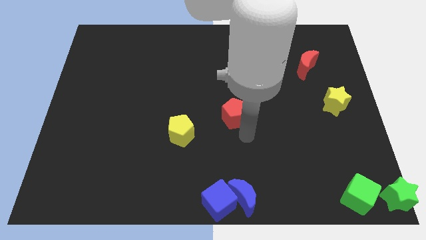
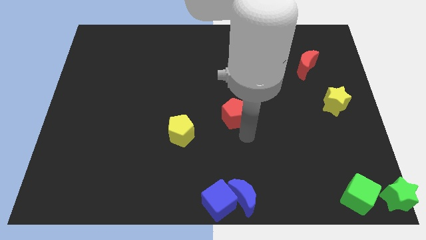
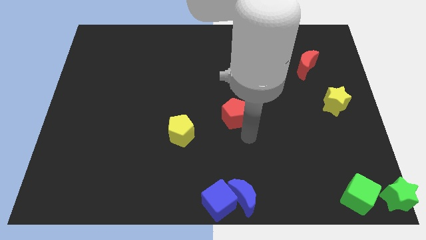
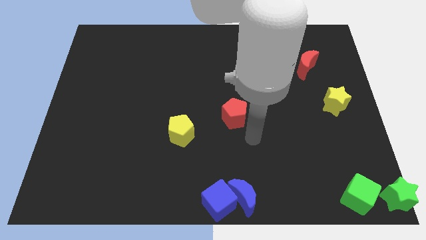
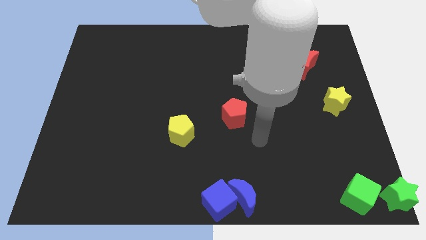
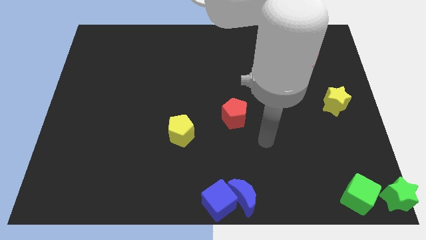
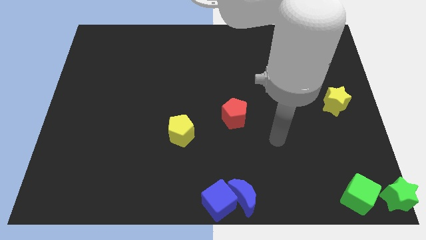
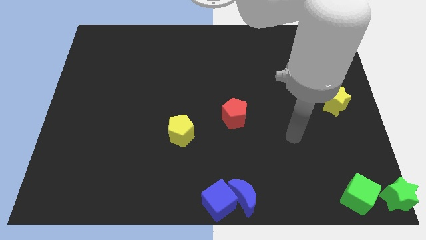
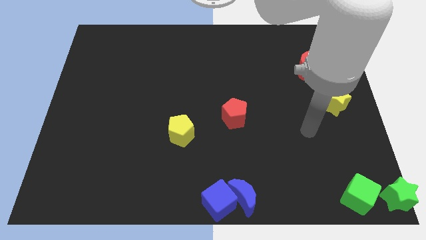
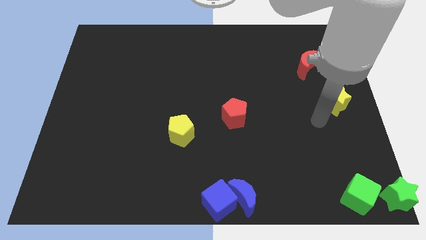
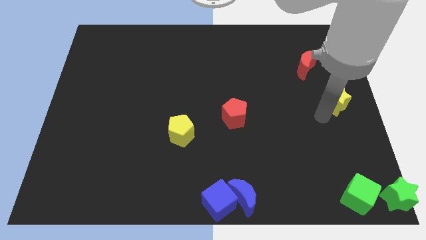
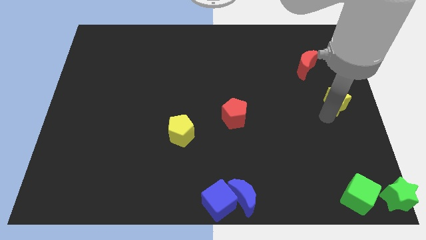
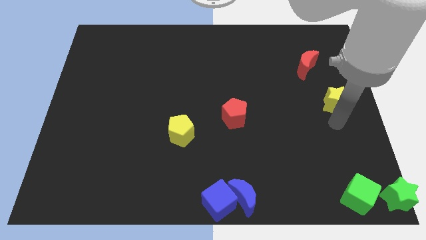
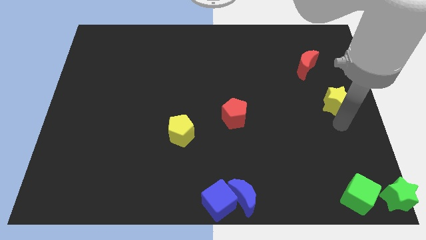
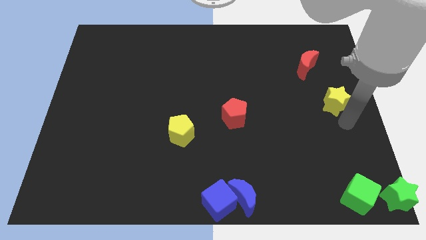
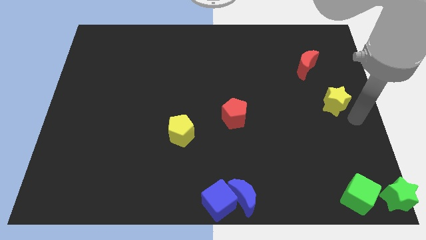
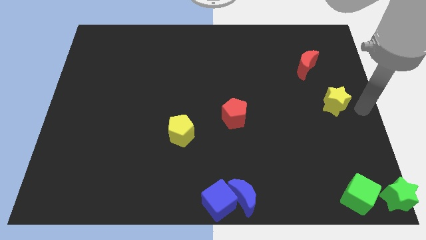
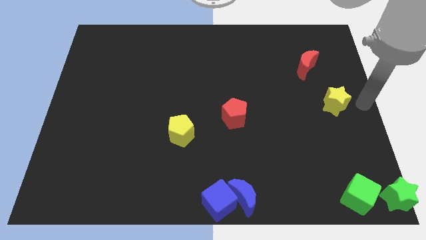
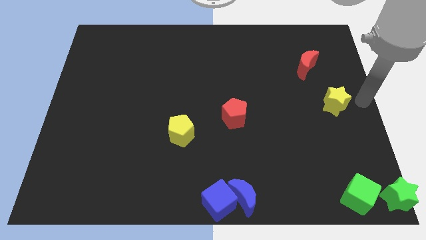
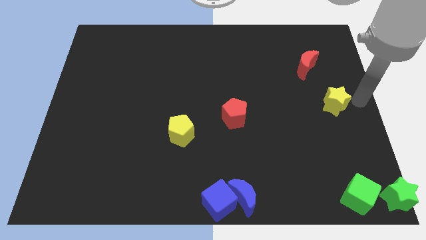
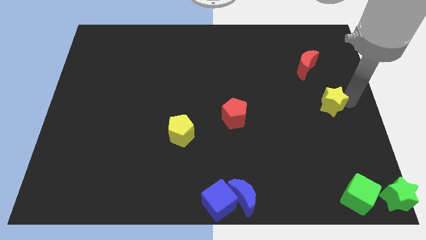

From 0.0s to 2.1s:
tap the yellow star

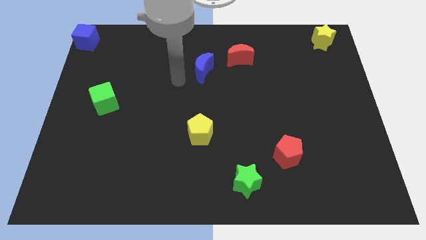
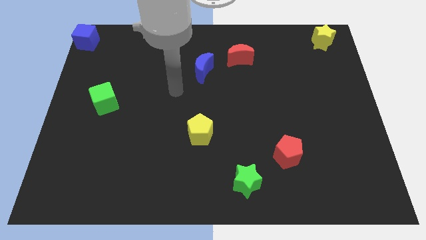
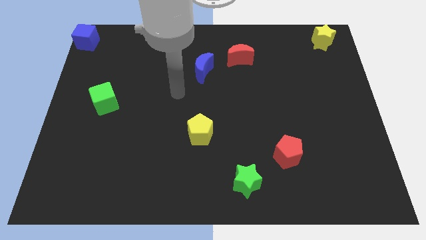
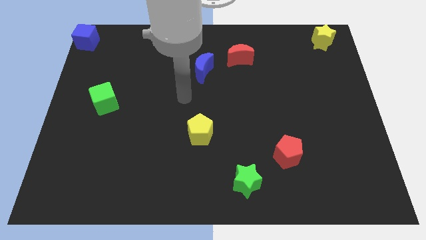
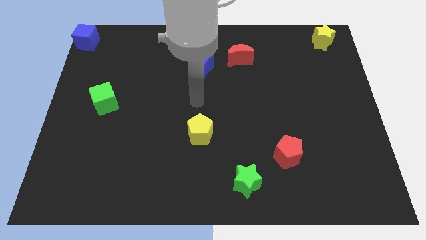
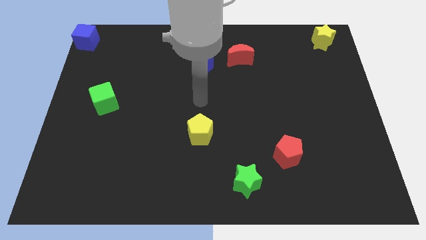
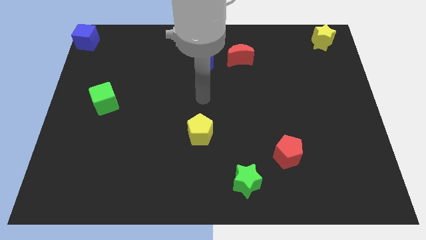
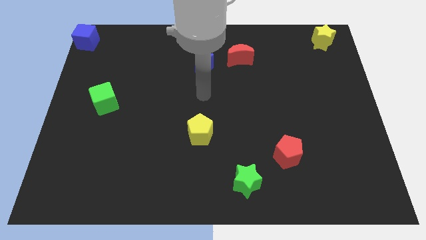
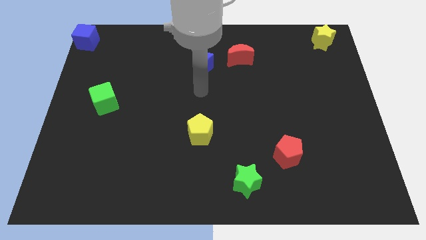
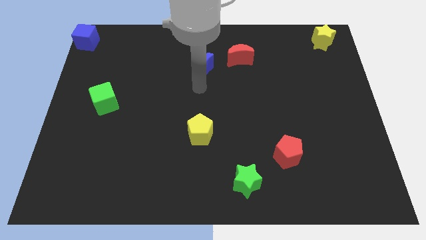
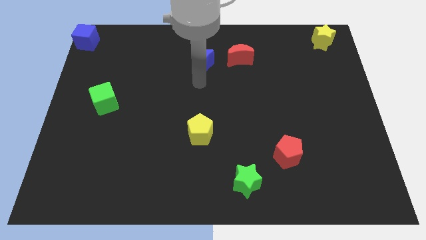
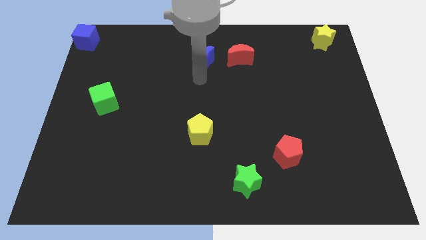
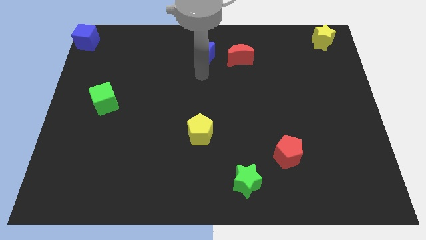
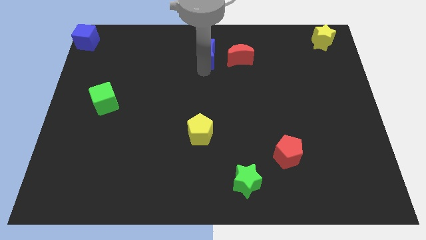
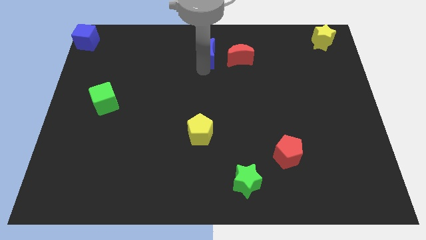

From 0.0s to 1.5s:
place the blue moon to the left of the red moon

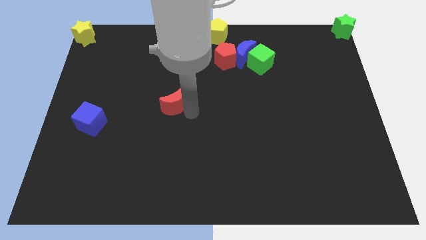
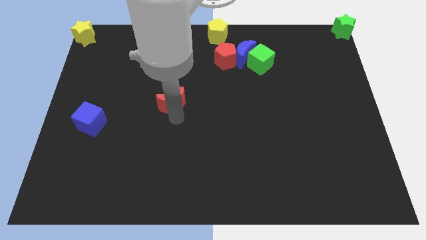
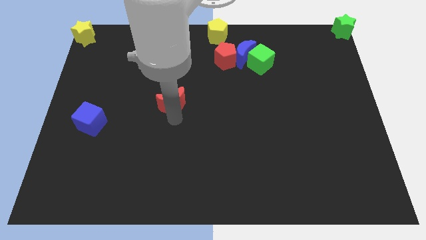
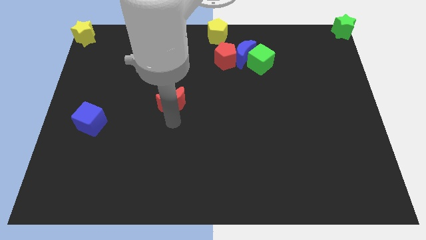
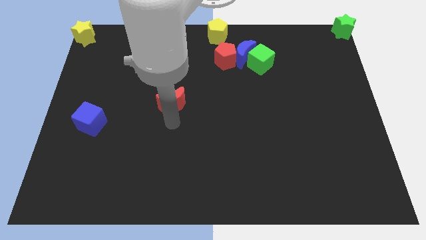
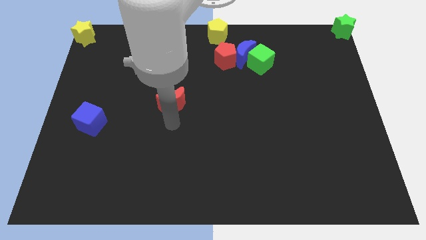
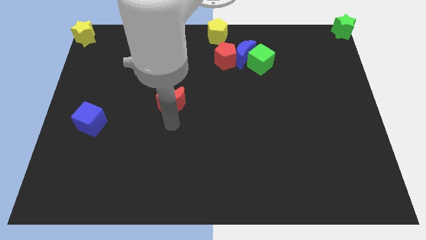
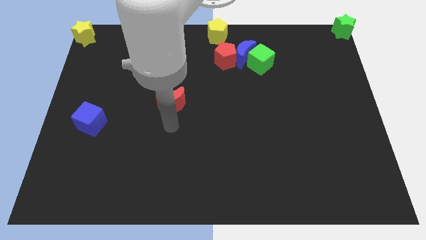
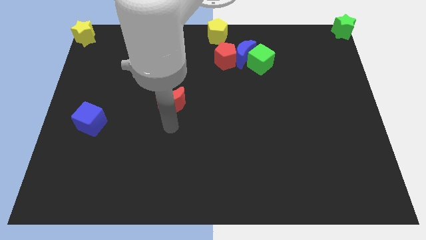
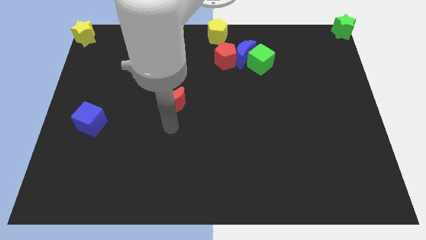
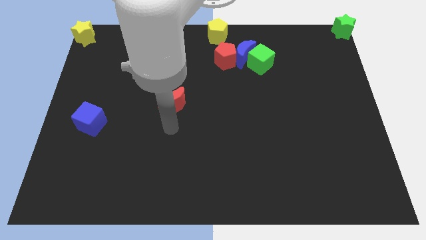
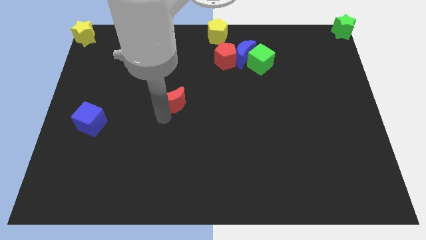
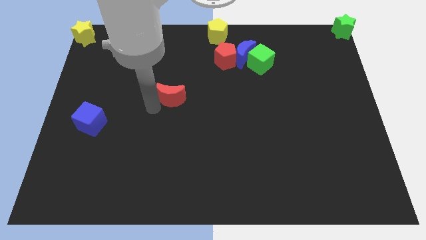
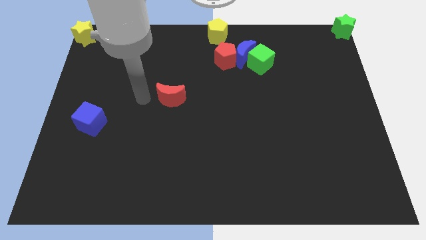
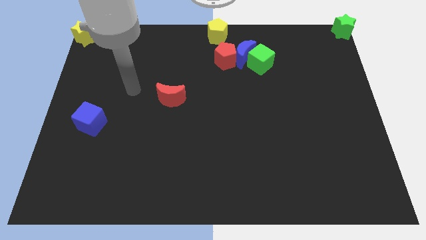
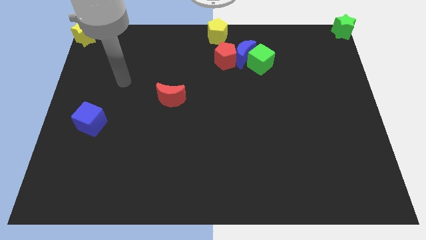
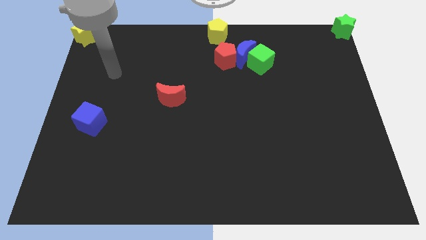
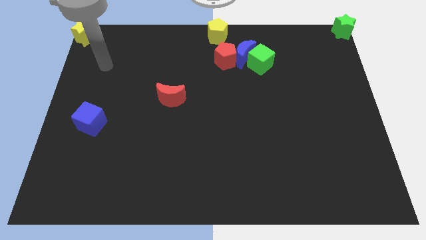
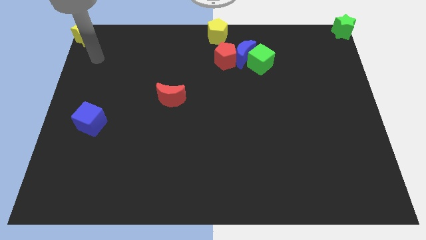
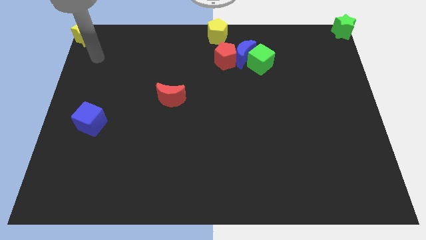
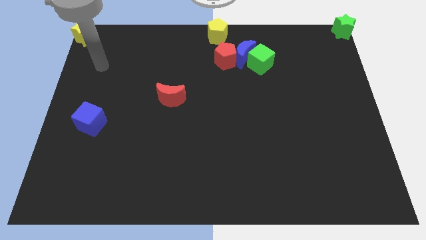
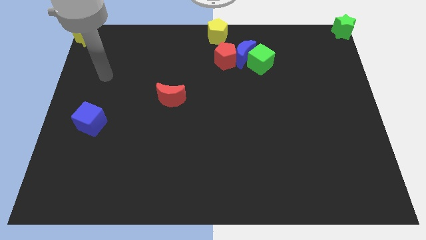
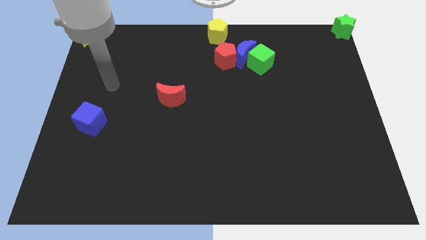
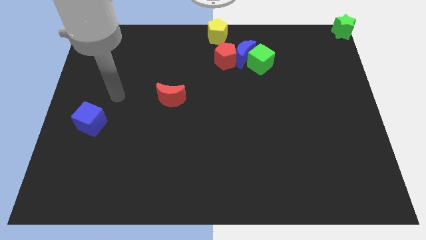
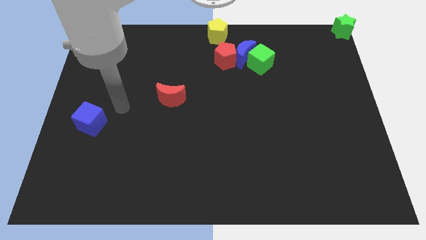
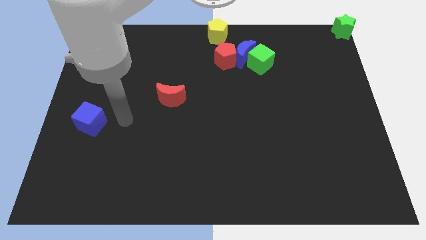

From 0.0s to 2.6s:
tap the bottom side of the red crescent

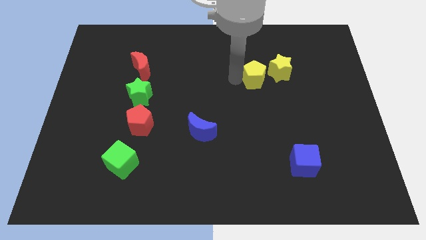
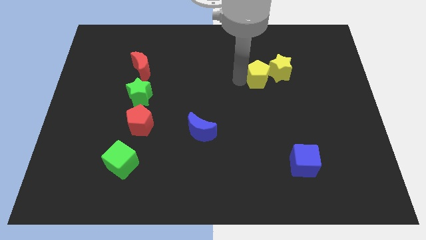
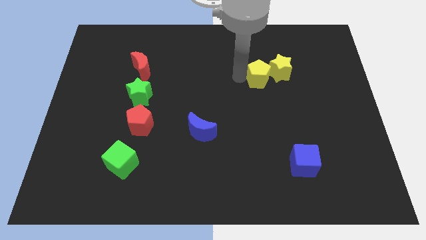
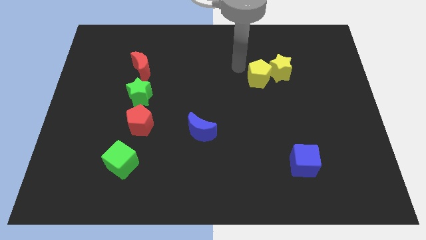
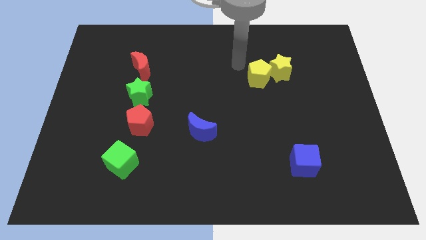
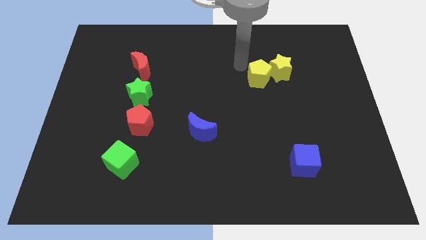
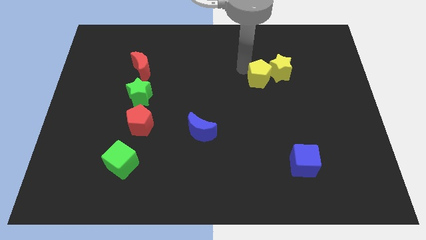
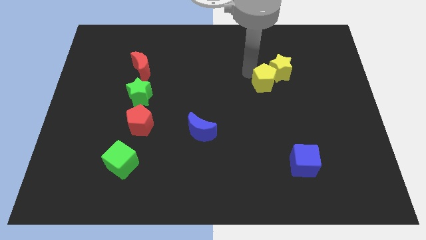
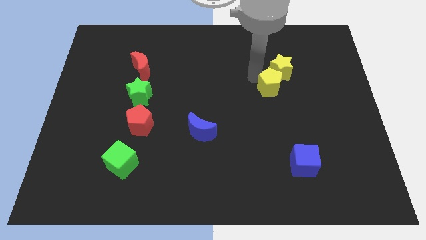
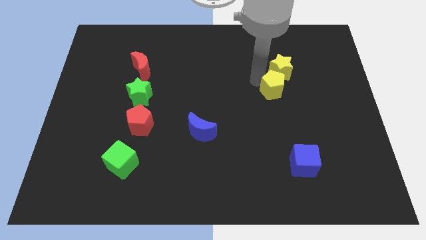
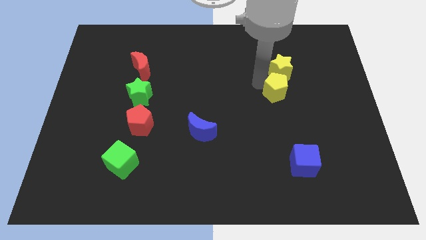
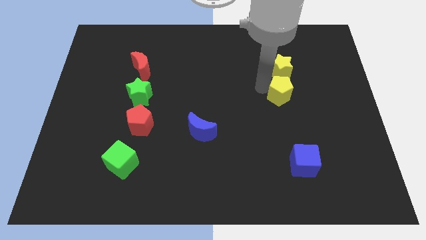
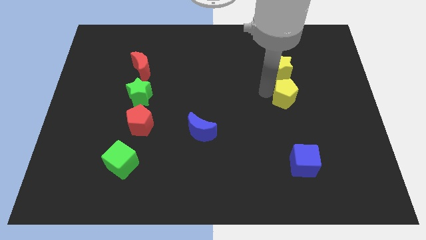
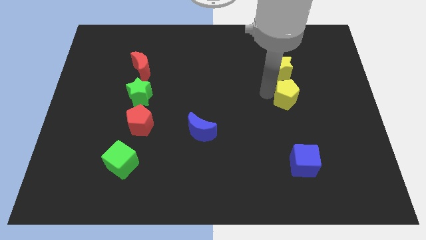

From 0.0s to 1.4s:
place yellow pentagon to the bottom of yellow star

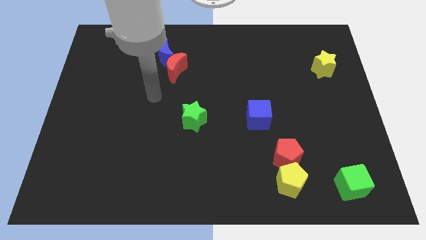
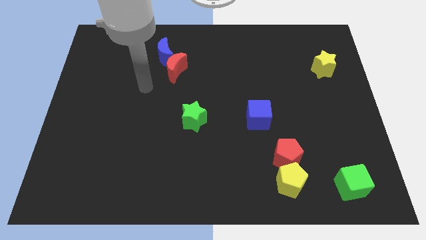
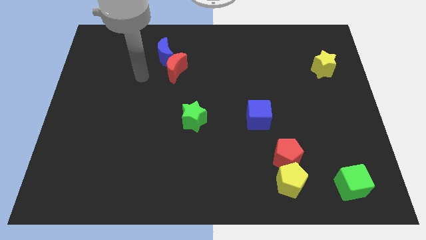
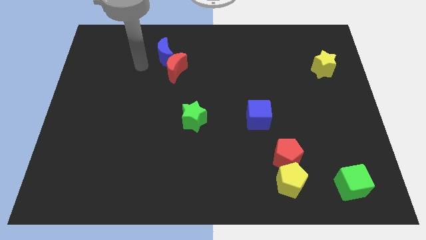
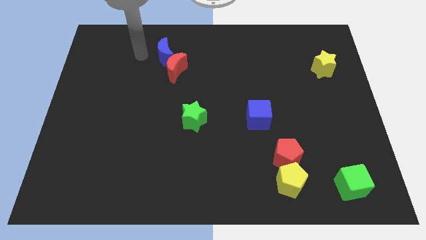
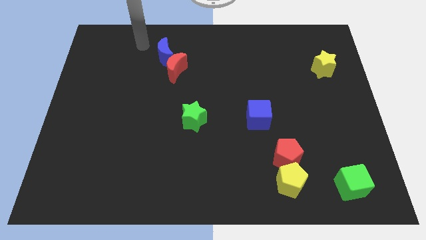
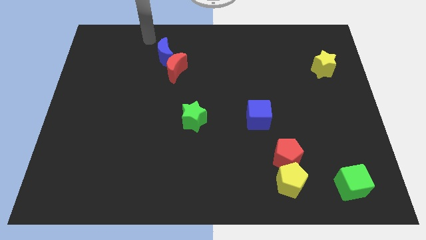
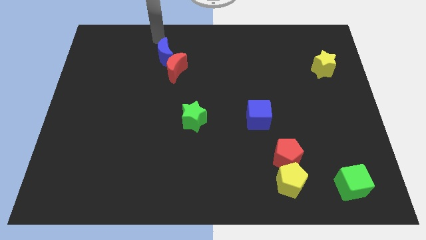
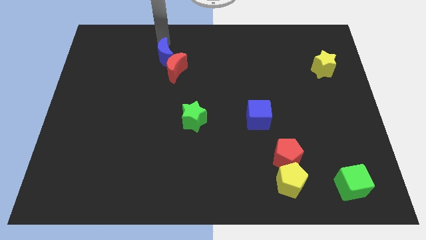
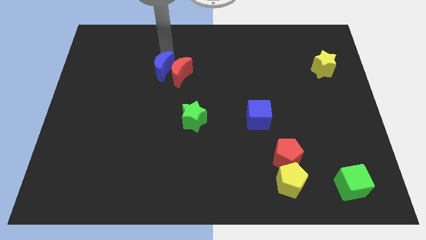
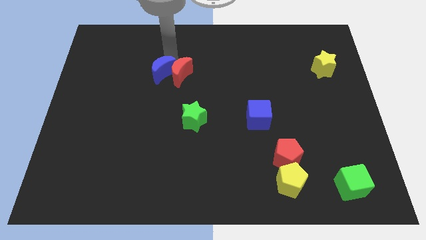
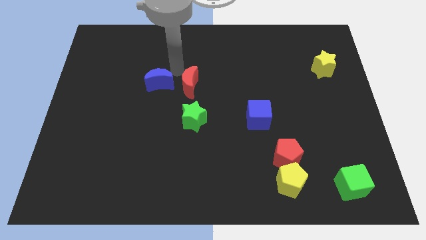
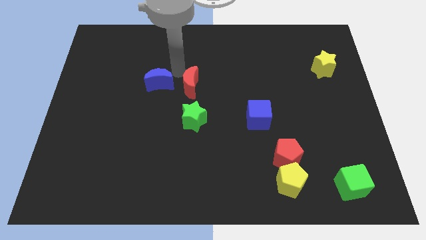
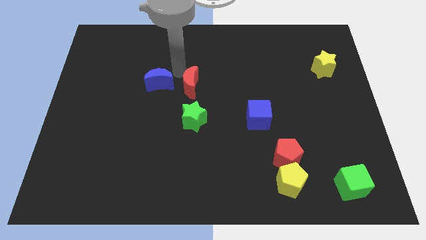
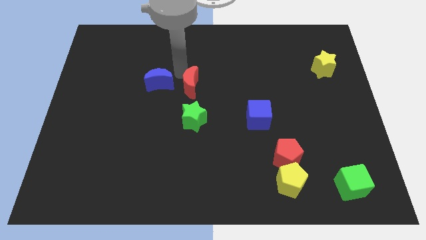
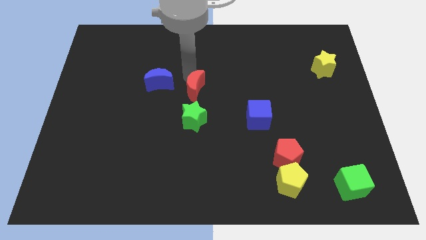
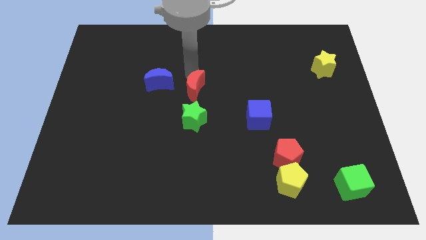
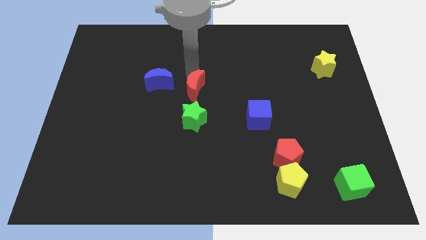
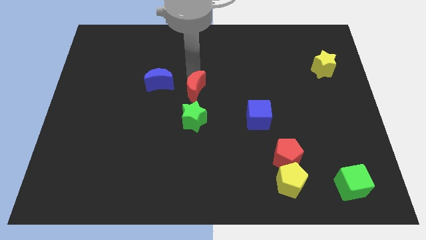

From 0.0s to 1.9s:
separate the red moon and blue moon
